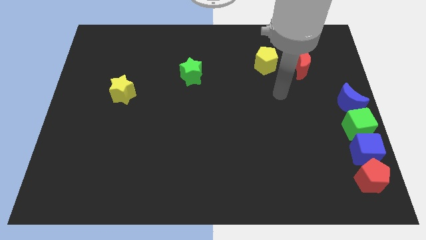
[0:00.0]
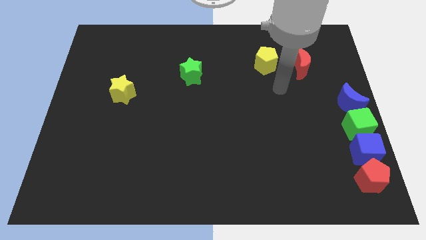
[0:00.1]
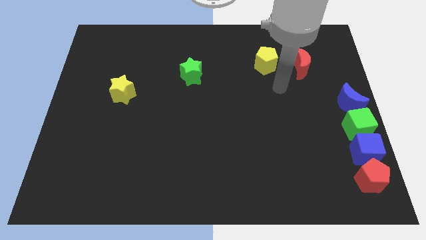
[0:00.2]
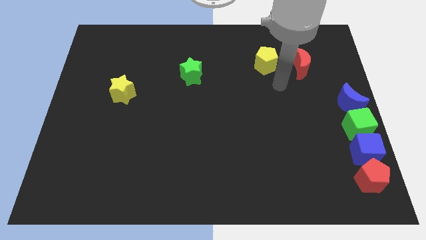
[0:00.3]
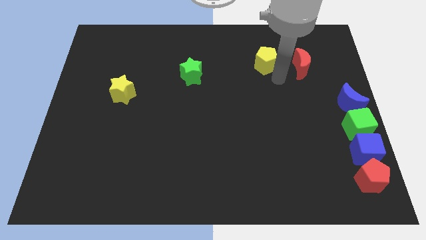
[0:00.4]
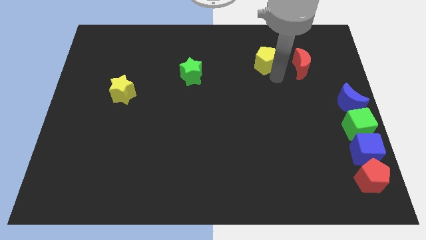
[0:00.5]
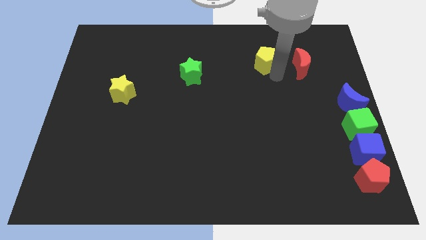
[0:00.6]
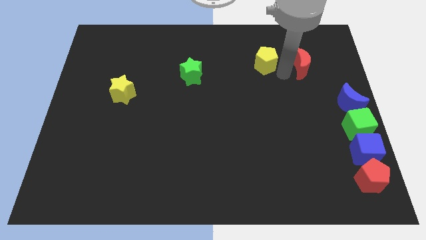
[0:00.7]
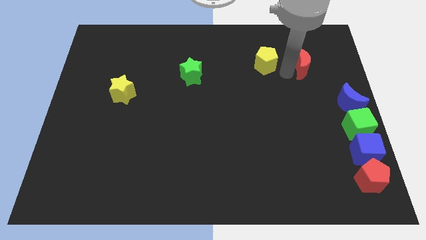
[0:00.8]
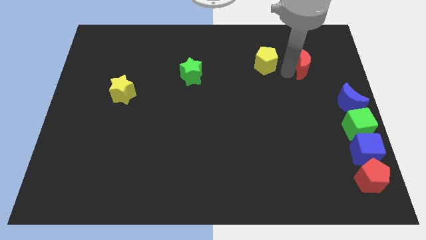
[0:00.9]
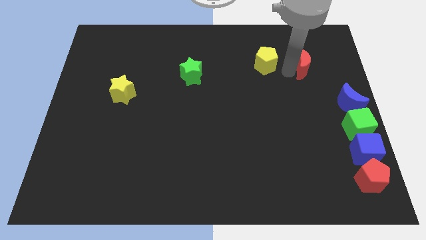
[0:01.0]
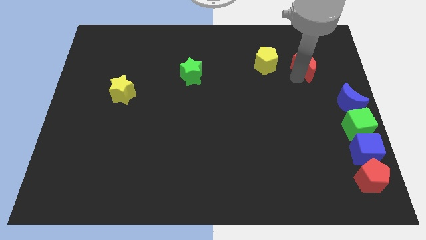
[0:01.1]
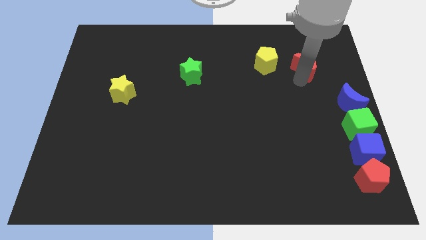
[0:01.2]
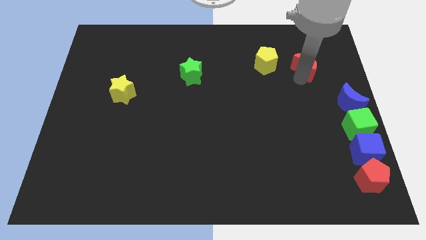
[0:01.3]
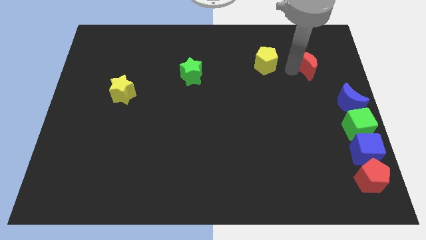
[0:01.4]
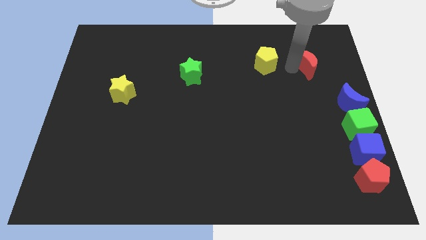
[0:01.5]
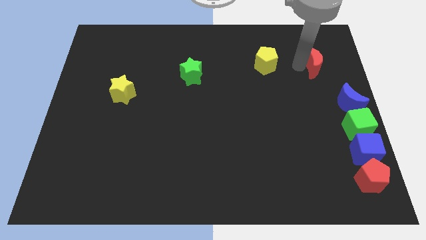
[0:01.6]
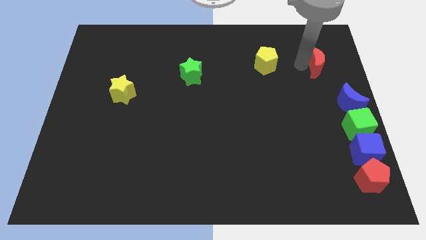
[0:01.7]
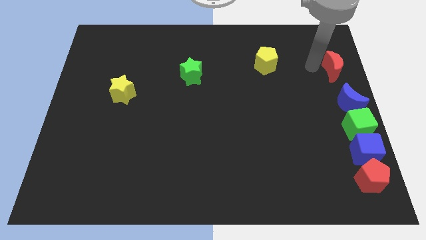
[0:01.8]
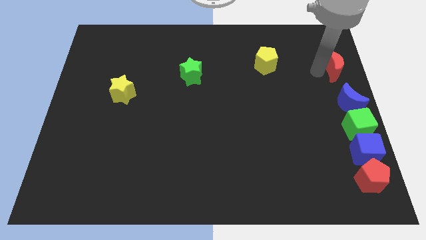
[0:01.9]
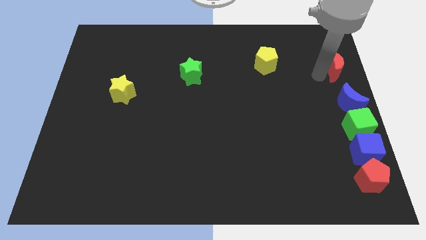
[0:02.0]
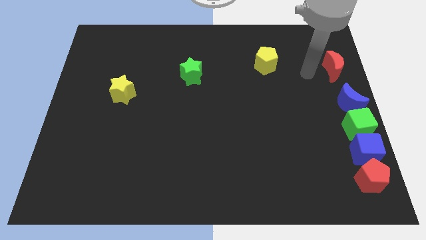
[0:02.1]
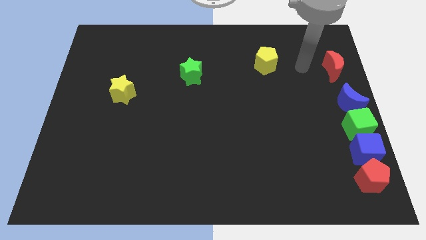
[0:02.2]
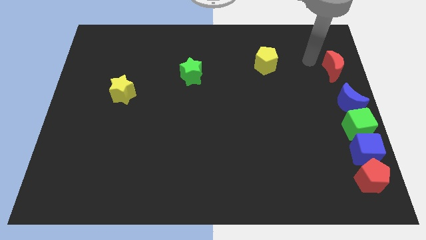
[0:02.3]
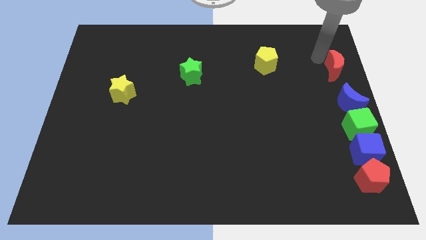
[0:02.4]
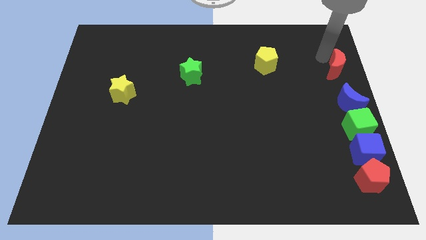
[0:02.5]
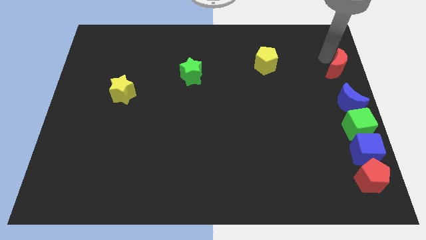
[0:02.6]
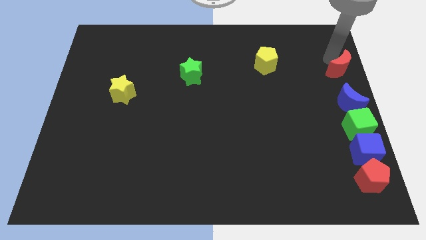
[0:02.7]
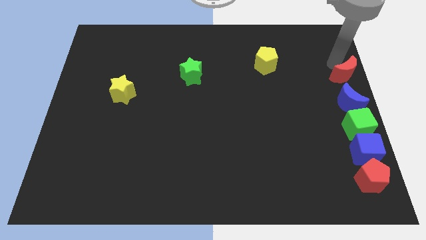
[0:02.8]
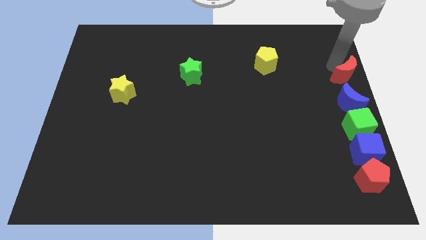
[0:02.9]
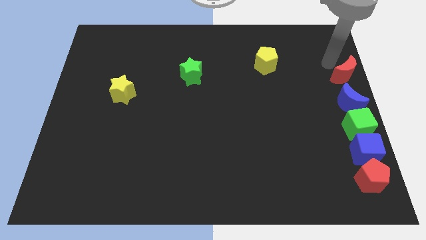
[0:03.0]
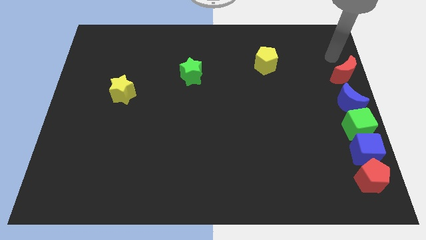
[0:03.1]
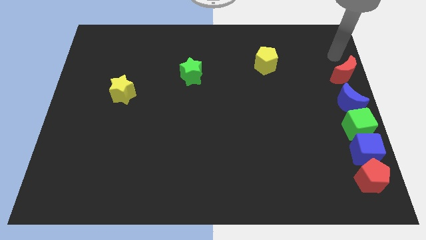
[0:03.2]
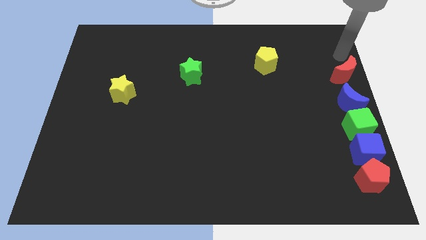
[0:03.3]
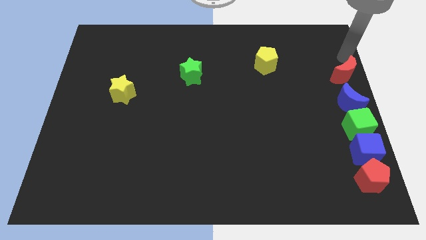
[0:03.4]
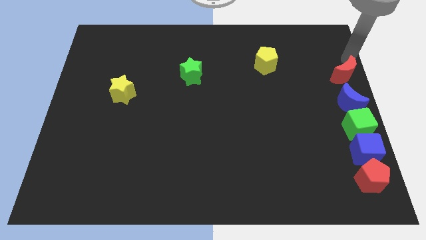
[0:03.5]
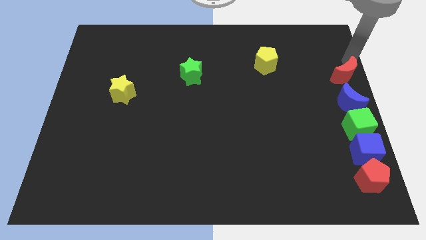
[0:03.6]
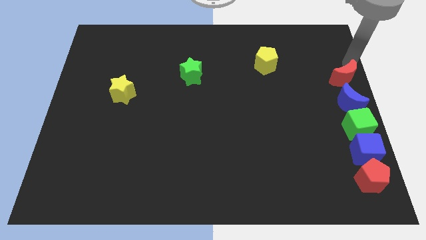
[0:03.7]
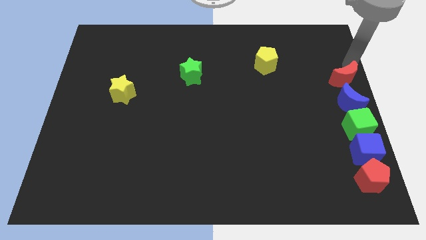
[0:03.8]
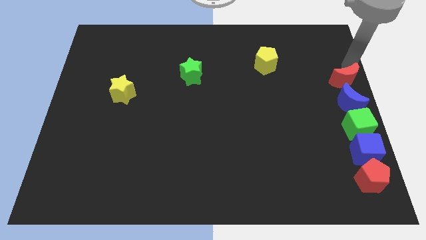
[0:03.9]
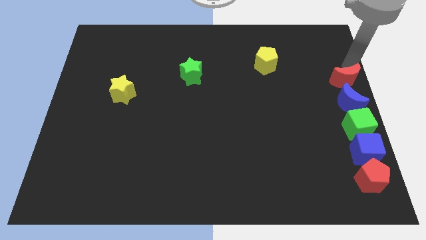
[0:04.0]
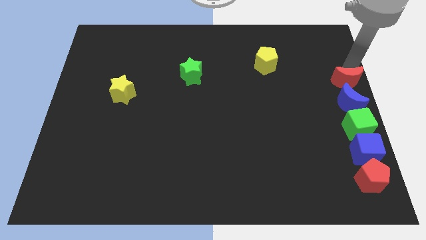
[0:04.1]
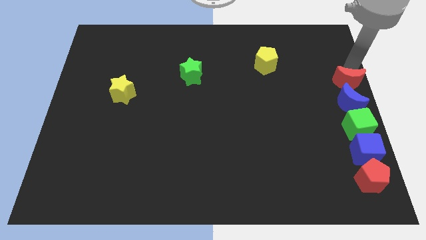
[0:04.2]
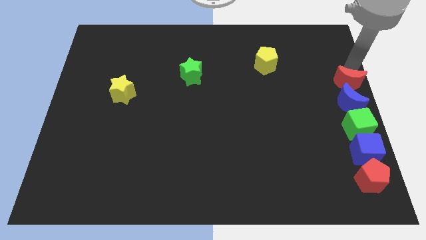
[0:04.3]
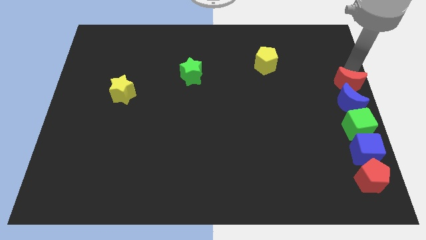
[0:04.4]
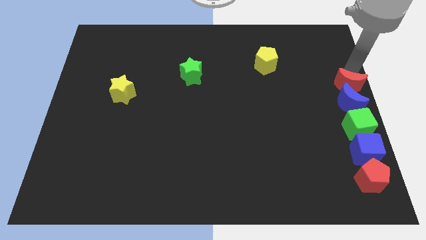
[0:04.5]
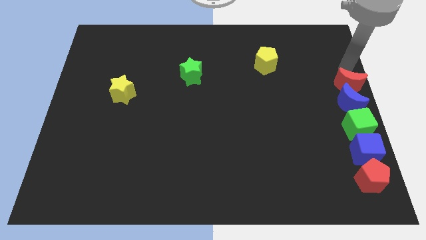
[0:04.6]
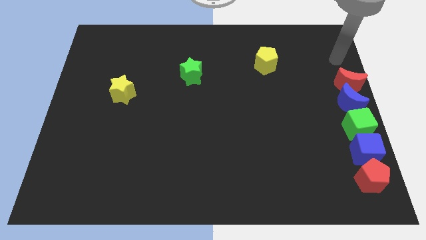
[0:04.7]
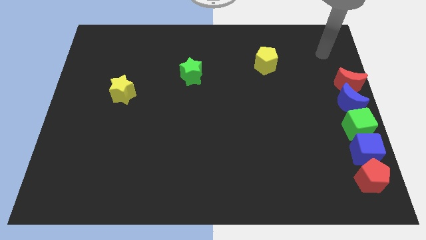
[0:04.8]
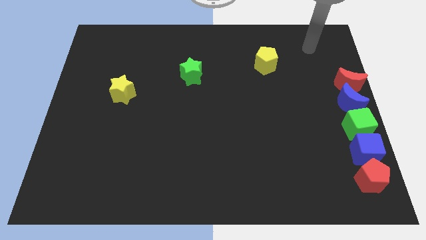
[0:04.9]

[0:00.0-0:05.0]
put the red crescent above the blue crescent

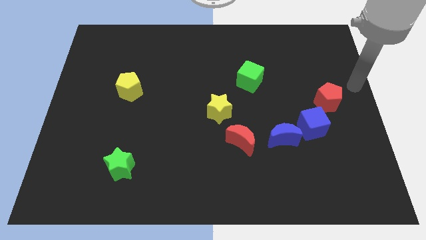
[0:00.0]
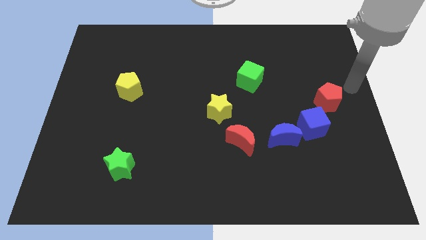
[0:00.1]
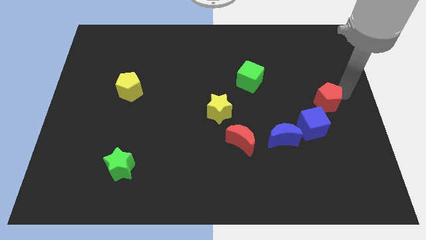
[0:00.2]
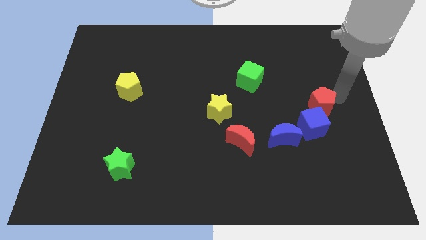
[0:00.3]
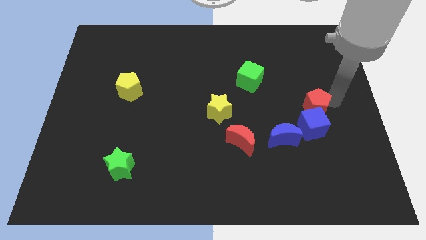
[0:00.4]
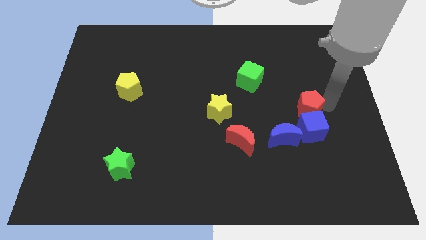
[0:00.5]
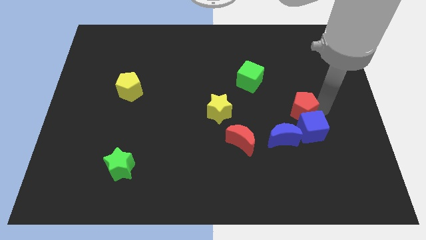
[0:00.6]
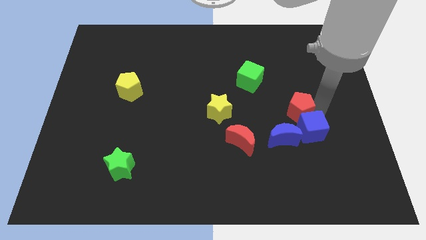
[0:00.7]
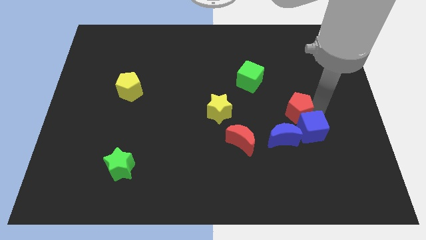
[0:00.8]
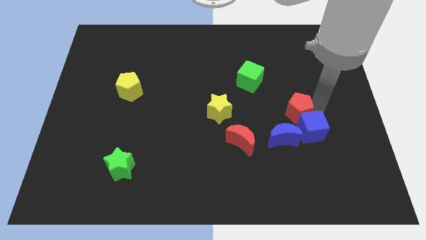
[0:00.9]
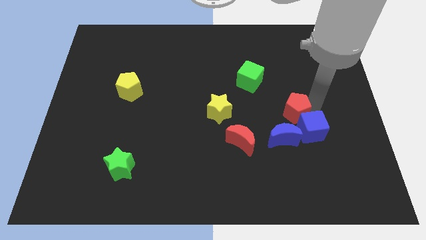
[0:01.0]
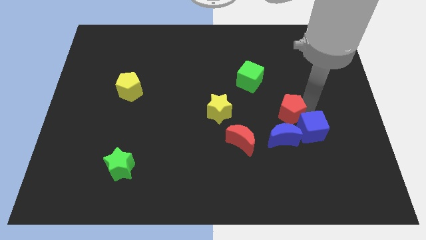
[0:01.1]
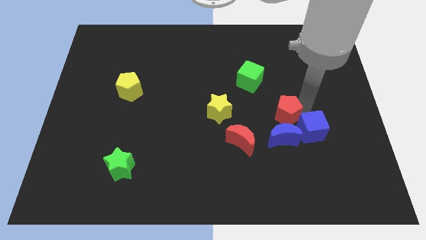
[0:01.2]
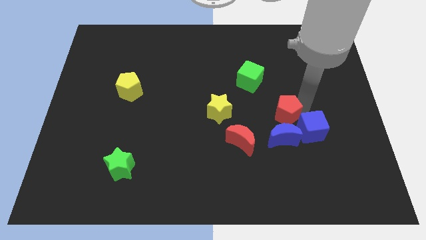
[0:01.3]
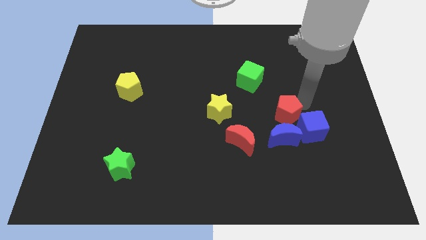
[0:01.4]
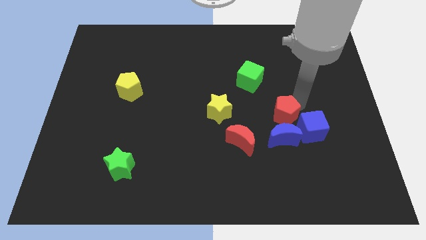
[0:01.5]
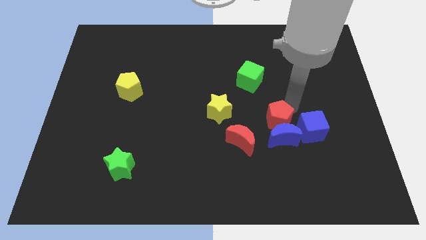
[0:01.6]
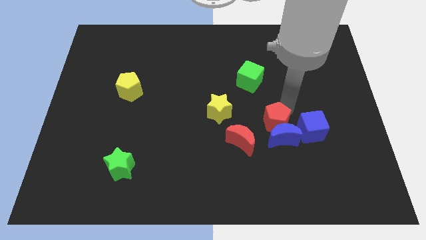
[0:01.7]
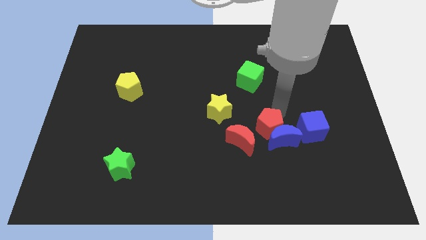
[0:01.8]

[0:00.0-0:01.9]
move the red pentagon into the blue moon

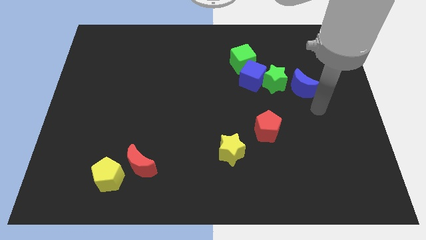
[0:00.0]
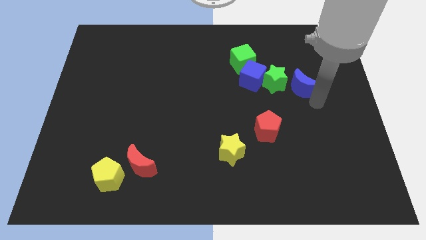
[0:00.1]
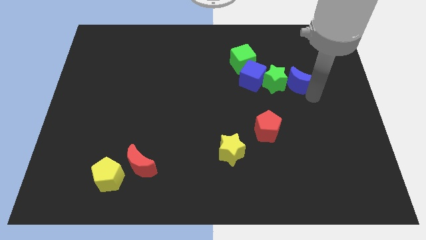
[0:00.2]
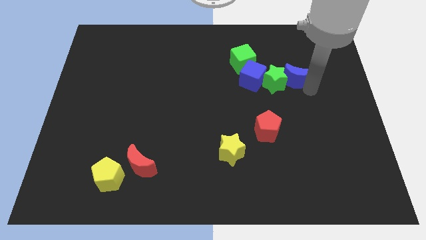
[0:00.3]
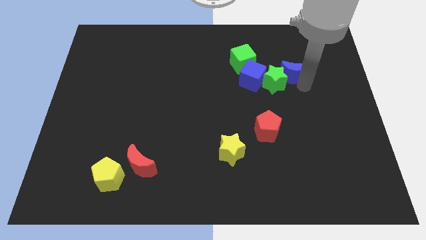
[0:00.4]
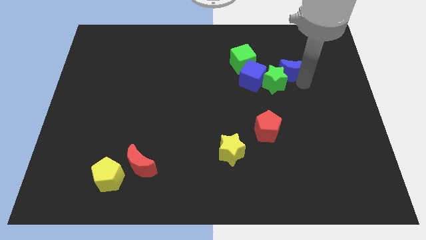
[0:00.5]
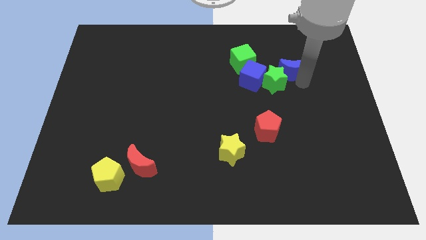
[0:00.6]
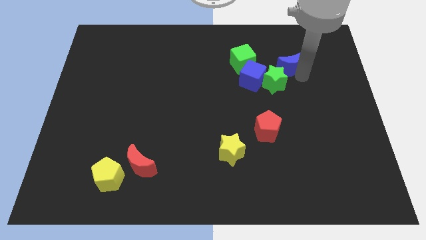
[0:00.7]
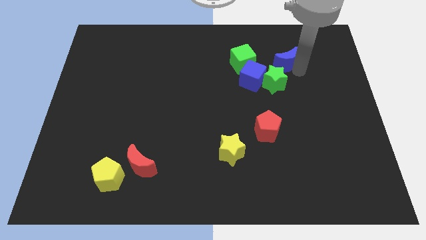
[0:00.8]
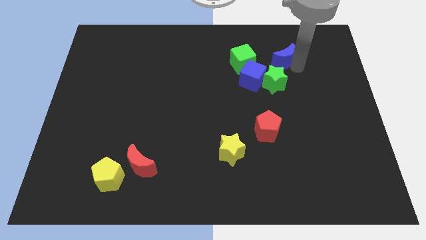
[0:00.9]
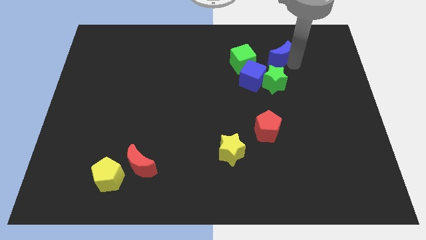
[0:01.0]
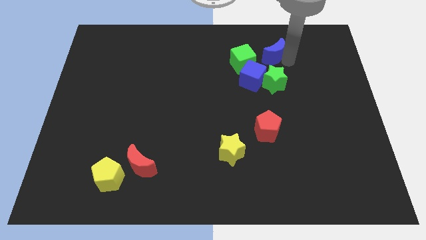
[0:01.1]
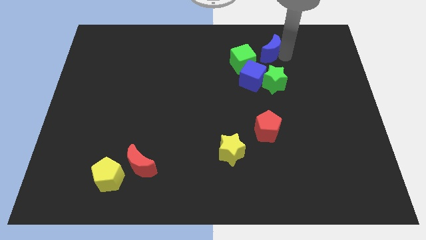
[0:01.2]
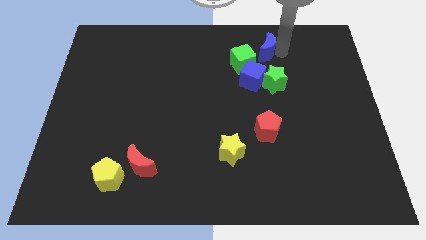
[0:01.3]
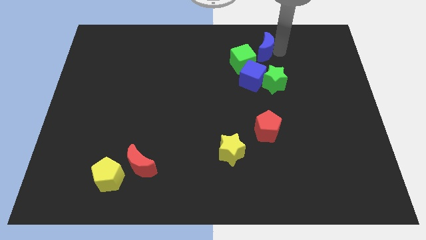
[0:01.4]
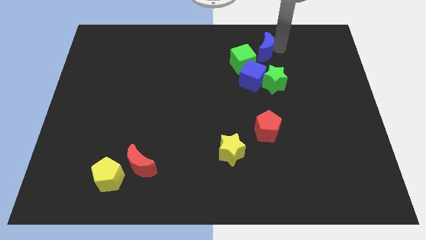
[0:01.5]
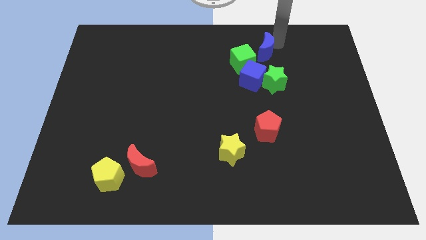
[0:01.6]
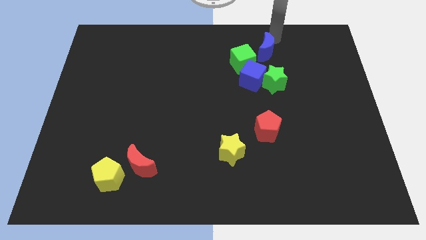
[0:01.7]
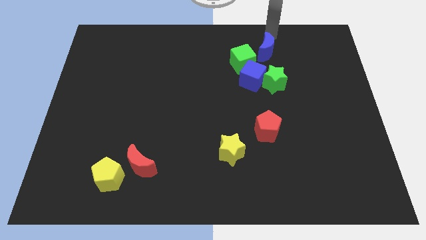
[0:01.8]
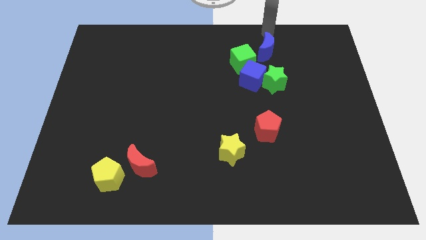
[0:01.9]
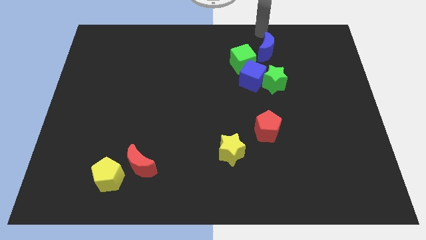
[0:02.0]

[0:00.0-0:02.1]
push blue crescent into green cube

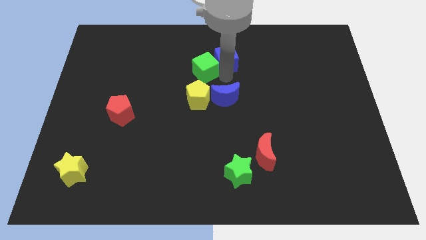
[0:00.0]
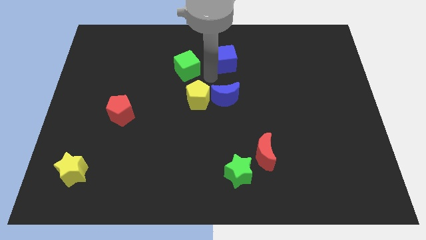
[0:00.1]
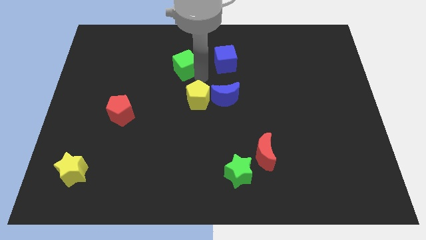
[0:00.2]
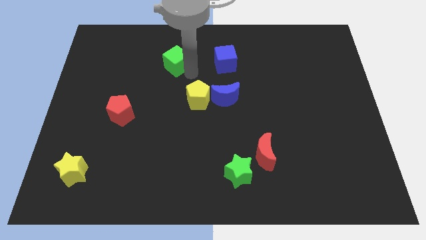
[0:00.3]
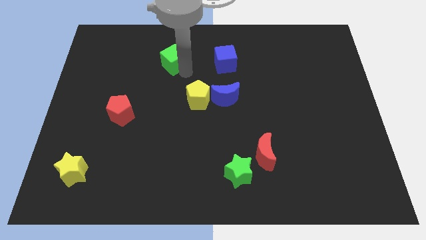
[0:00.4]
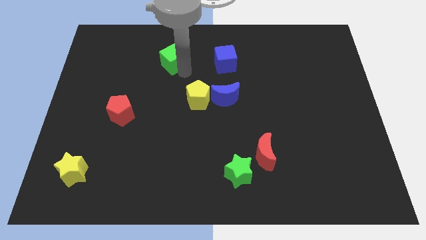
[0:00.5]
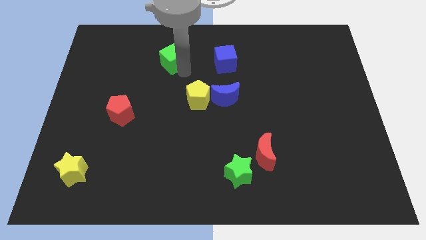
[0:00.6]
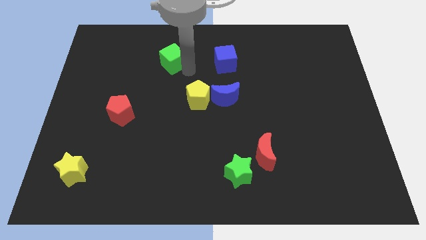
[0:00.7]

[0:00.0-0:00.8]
separate green cube from blue cube
